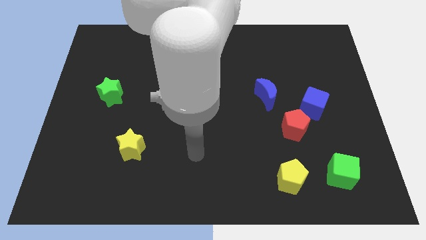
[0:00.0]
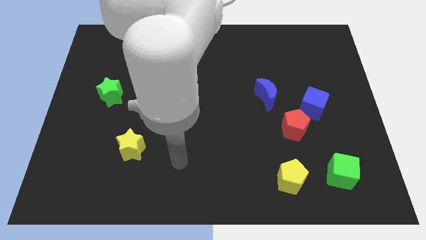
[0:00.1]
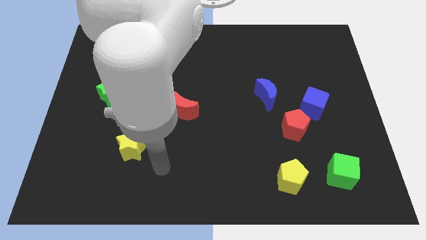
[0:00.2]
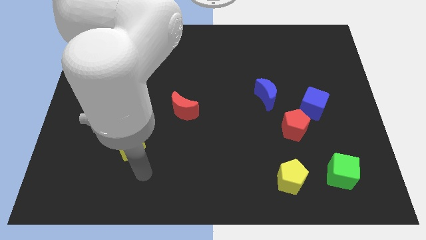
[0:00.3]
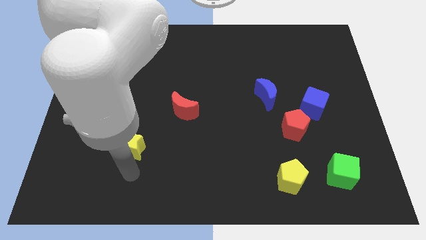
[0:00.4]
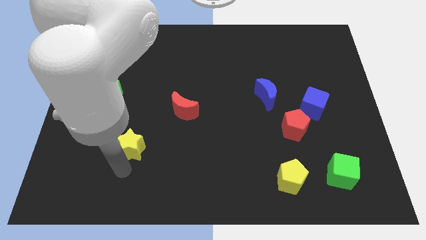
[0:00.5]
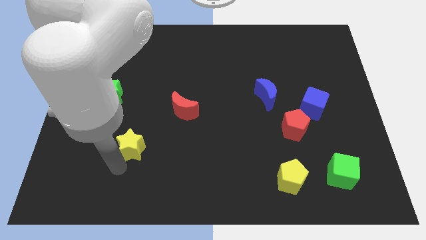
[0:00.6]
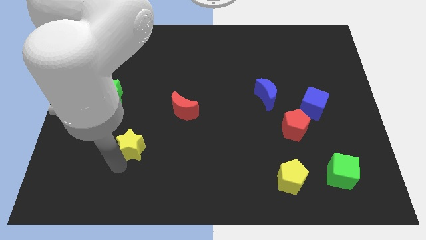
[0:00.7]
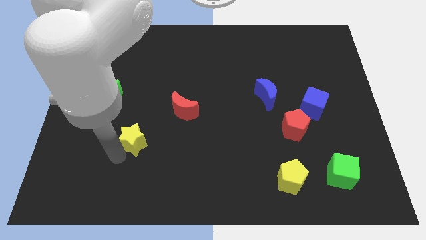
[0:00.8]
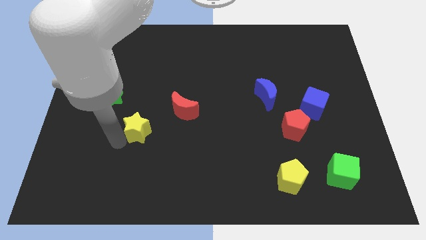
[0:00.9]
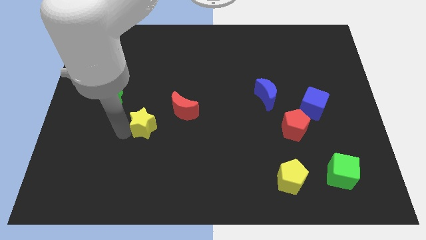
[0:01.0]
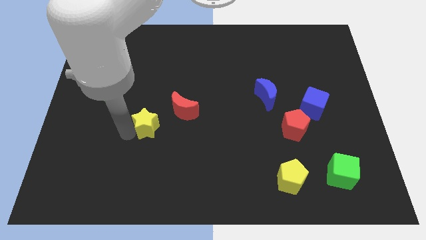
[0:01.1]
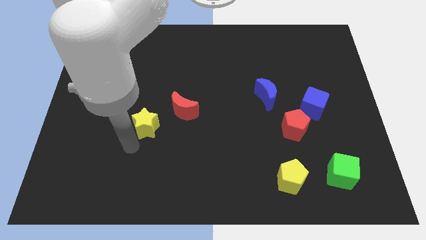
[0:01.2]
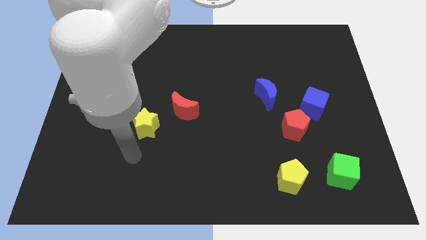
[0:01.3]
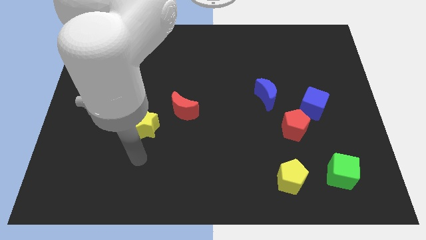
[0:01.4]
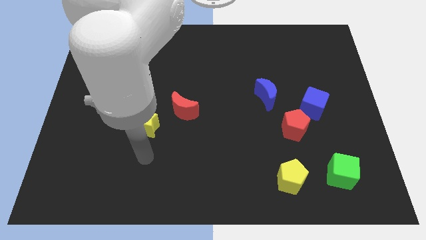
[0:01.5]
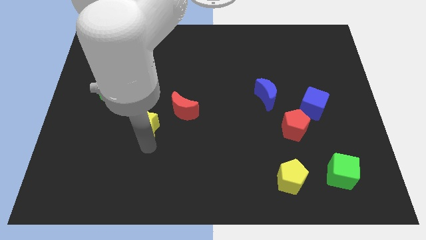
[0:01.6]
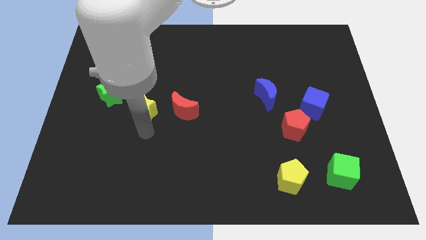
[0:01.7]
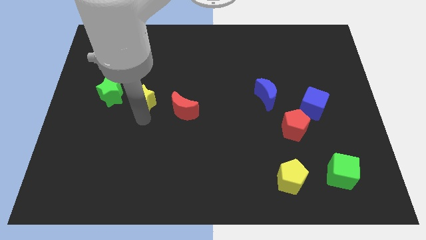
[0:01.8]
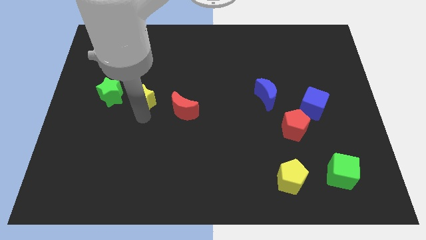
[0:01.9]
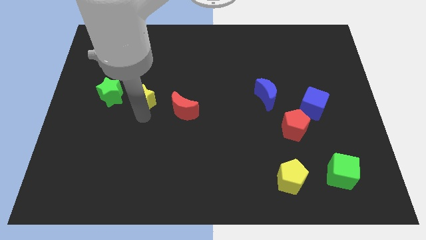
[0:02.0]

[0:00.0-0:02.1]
put the yellow star between the green star and red moon

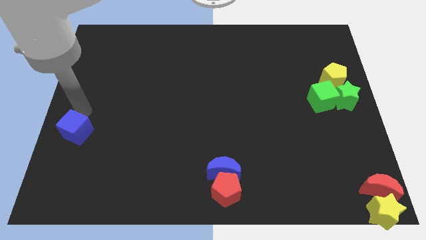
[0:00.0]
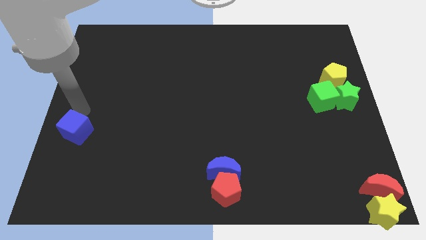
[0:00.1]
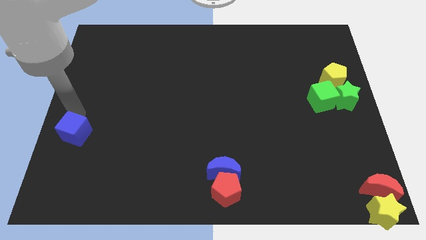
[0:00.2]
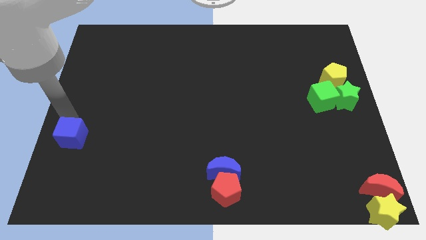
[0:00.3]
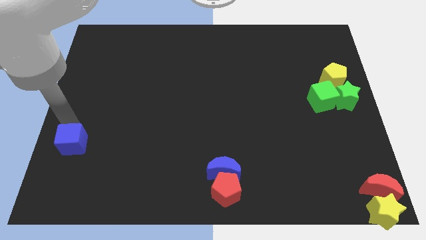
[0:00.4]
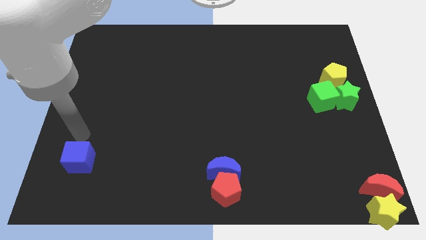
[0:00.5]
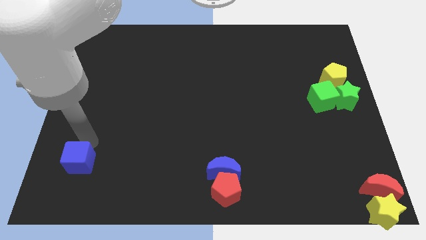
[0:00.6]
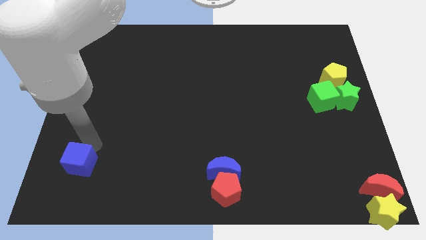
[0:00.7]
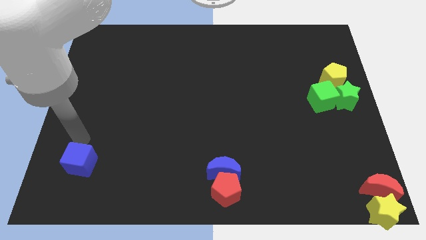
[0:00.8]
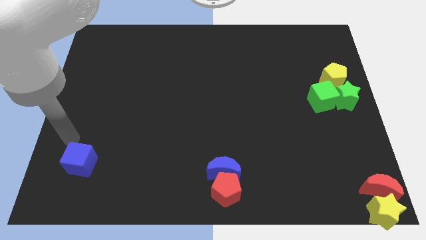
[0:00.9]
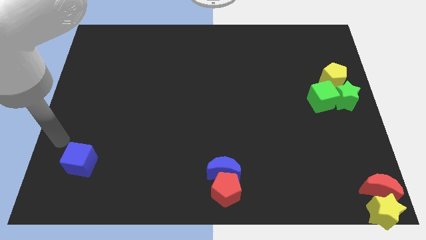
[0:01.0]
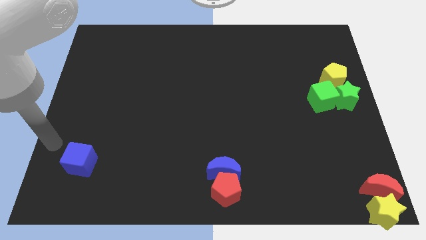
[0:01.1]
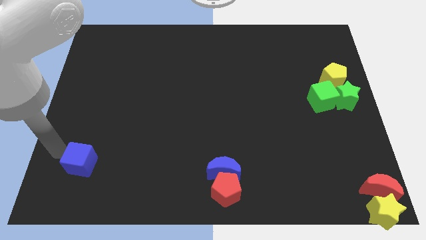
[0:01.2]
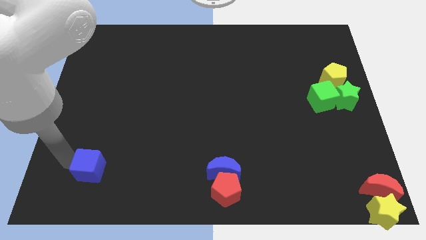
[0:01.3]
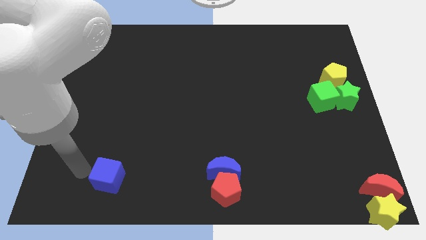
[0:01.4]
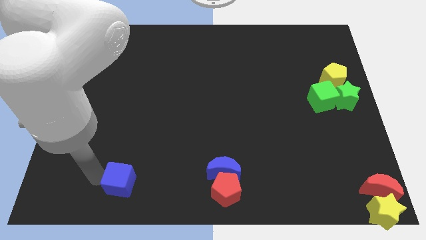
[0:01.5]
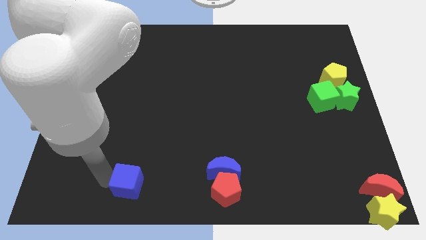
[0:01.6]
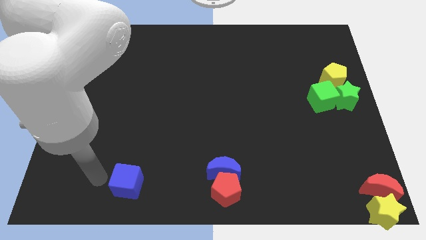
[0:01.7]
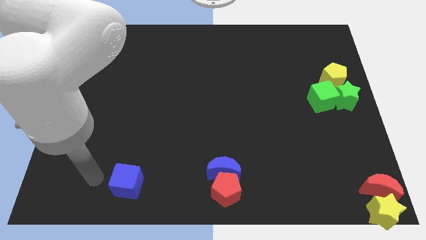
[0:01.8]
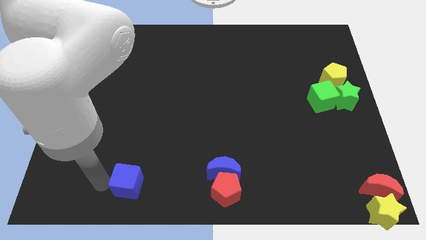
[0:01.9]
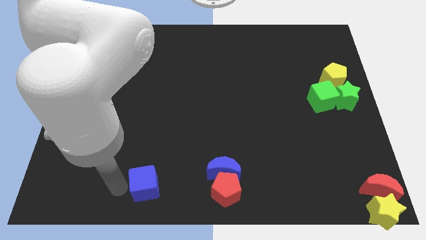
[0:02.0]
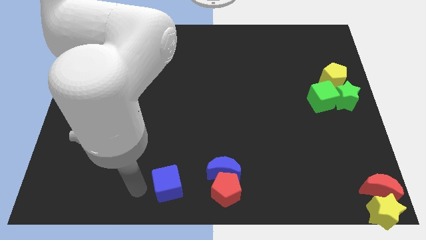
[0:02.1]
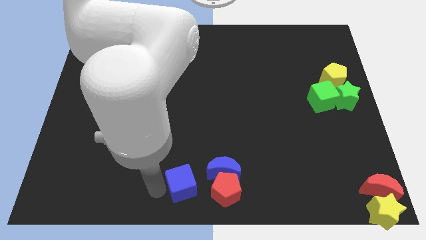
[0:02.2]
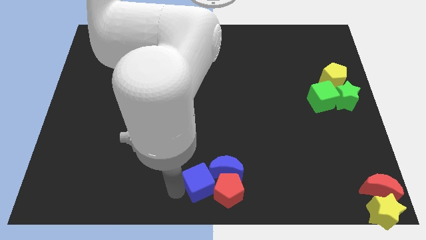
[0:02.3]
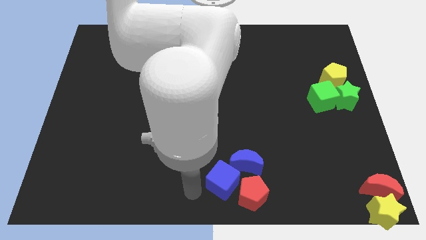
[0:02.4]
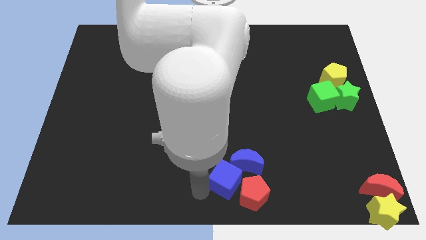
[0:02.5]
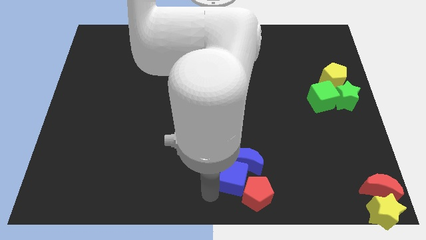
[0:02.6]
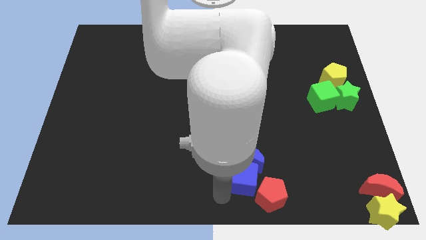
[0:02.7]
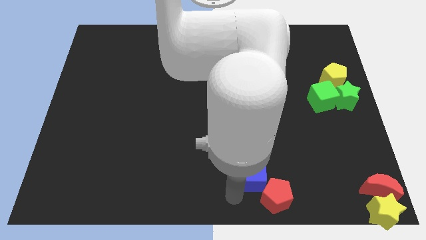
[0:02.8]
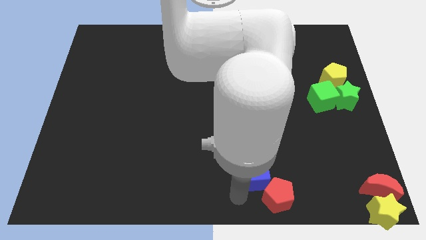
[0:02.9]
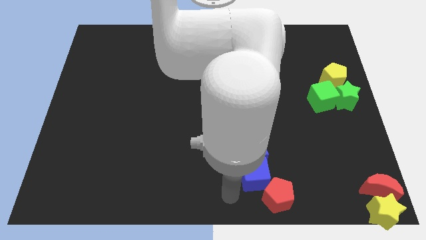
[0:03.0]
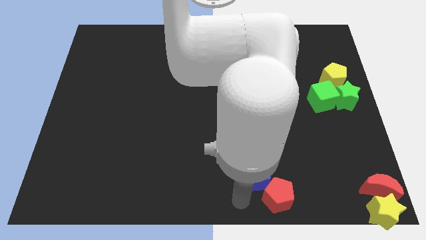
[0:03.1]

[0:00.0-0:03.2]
push the blue cube in between the red pentagon and the blue moon

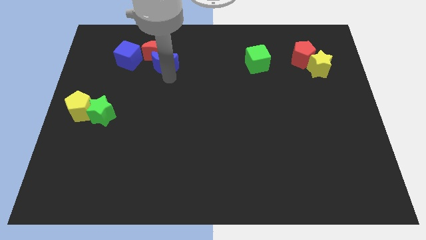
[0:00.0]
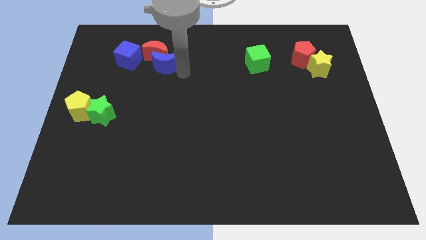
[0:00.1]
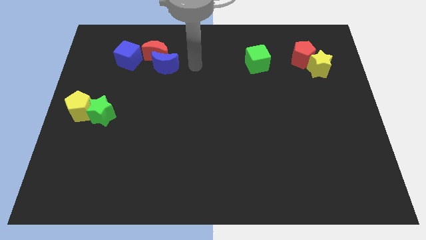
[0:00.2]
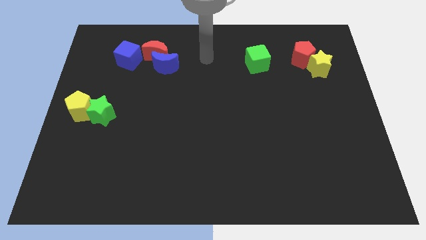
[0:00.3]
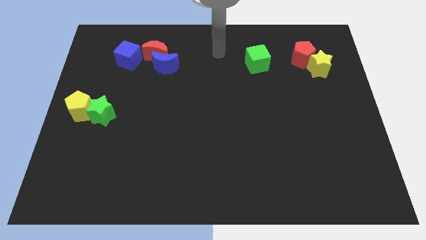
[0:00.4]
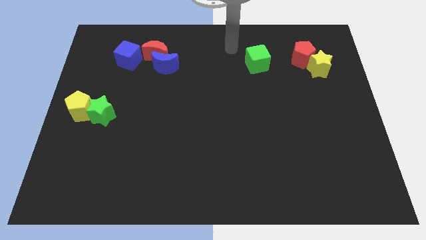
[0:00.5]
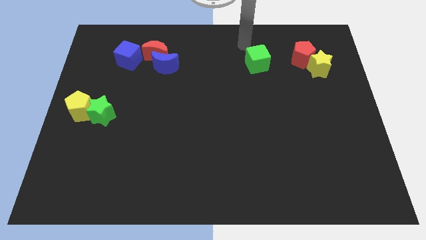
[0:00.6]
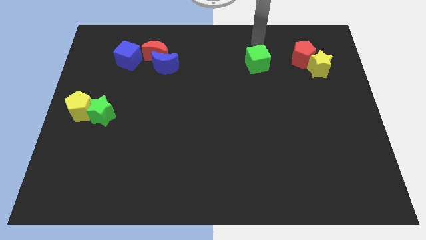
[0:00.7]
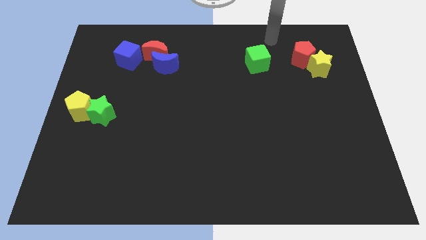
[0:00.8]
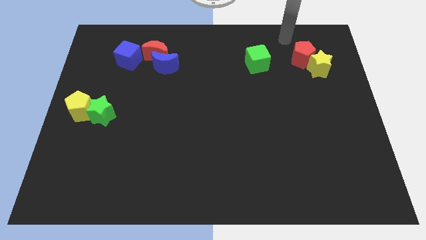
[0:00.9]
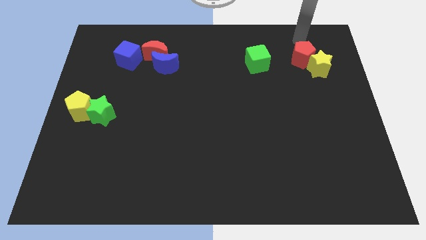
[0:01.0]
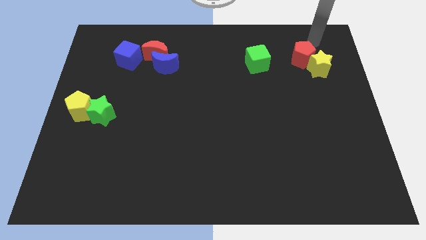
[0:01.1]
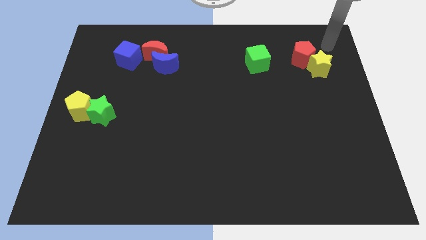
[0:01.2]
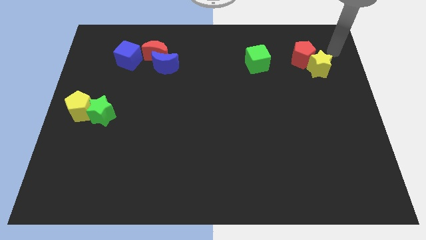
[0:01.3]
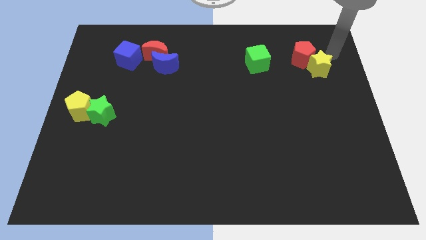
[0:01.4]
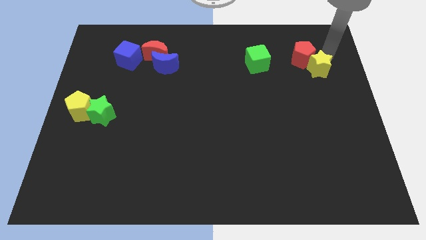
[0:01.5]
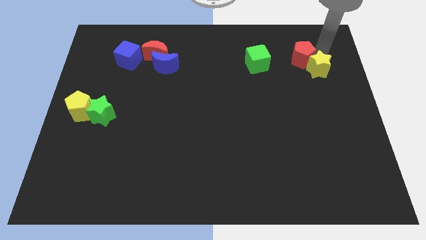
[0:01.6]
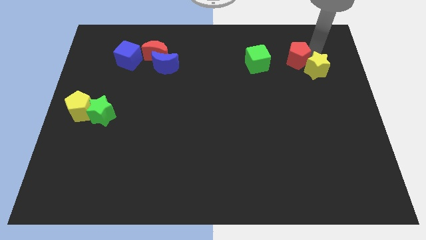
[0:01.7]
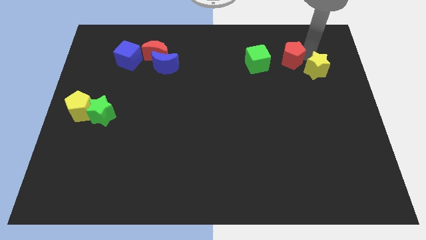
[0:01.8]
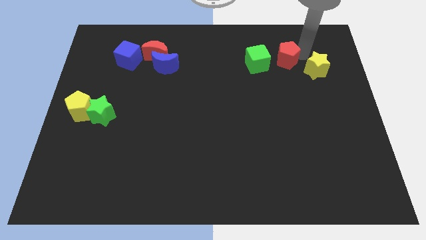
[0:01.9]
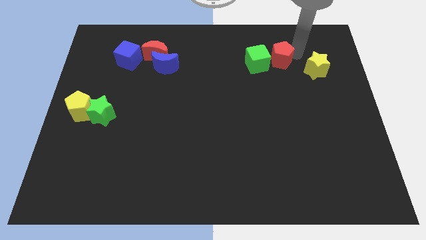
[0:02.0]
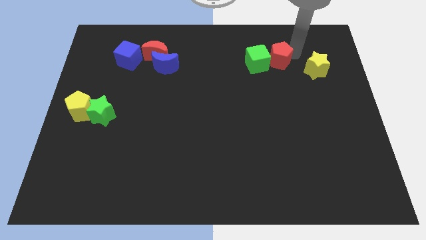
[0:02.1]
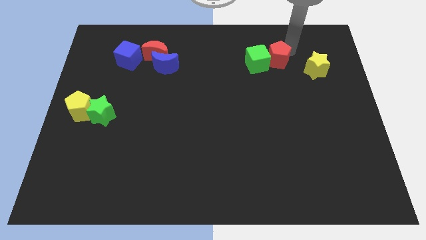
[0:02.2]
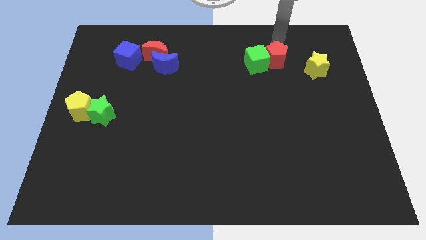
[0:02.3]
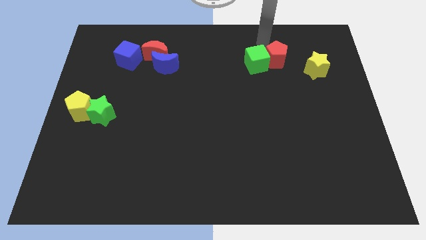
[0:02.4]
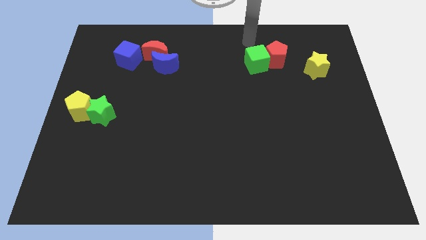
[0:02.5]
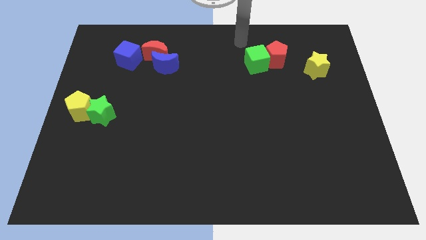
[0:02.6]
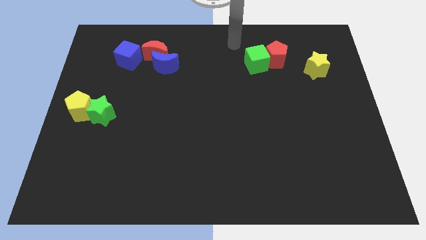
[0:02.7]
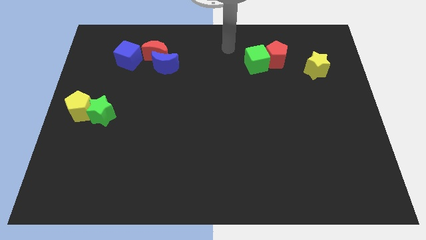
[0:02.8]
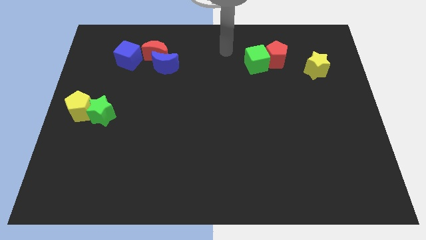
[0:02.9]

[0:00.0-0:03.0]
push red pentagon in to green cube

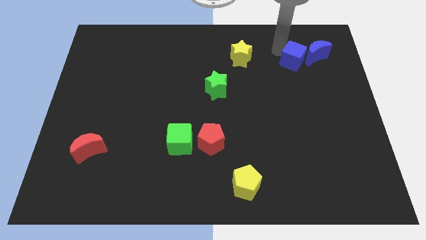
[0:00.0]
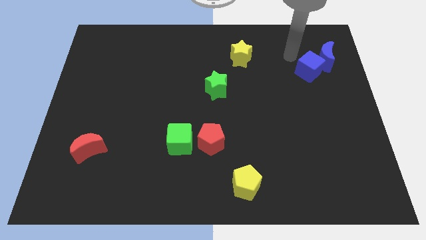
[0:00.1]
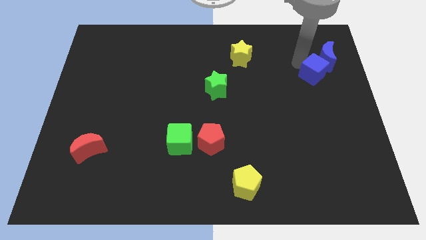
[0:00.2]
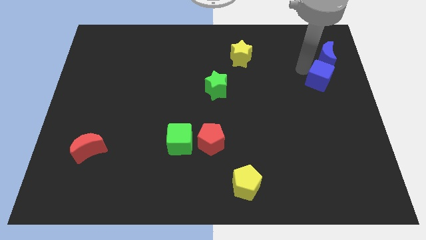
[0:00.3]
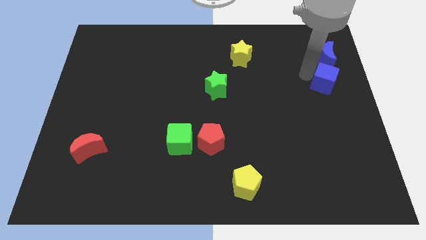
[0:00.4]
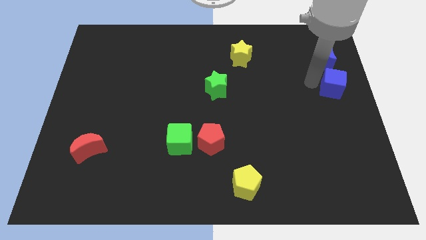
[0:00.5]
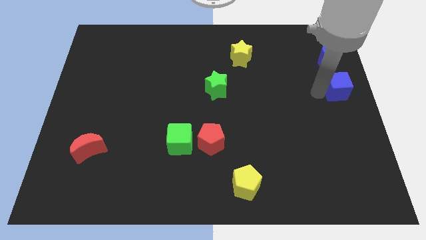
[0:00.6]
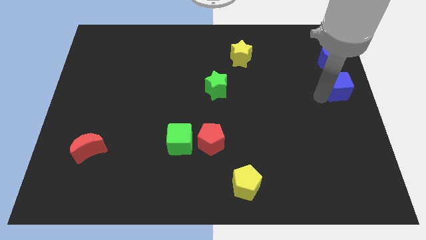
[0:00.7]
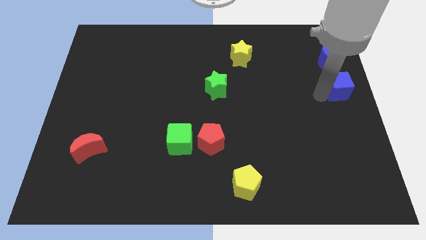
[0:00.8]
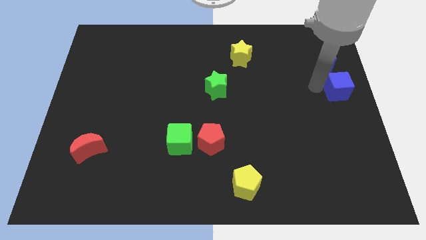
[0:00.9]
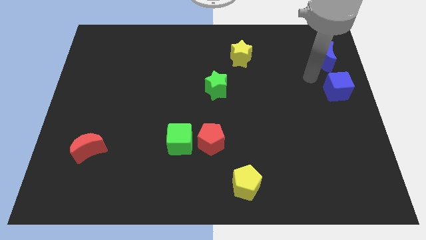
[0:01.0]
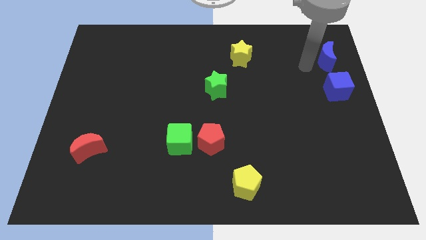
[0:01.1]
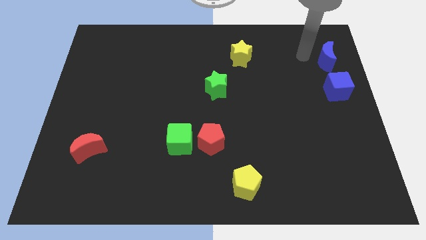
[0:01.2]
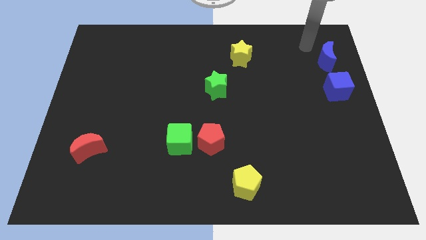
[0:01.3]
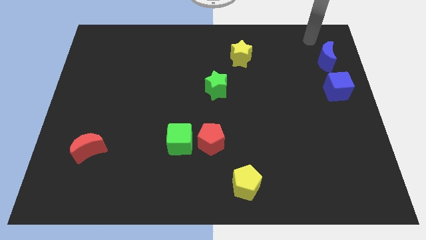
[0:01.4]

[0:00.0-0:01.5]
push the blue cube towards the right side of the board
